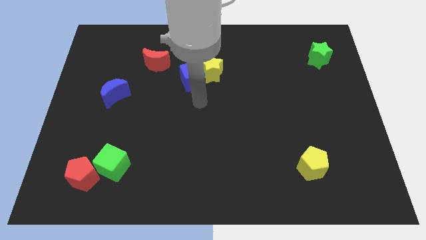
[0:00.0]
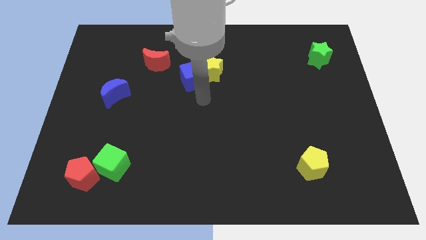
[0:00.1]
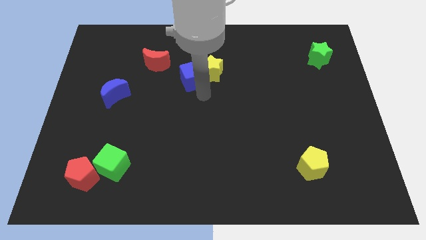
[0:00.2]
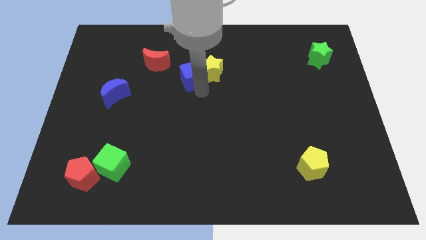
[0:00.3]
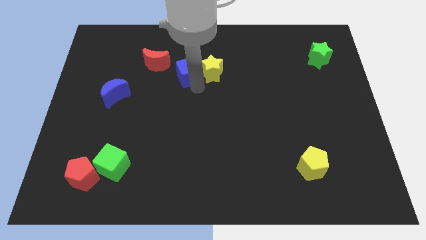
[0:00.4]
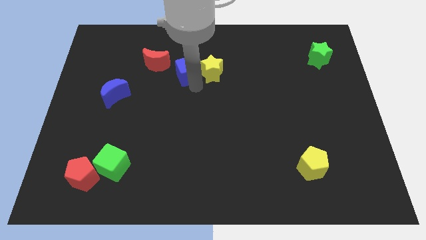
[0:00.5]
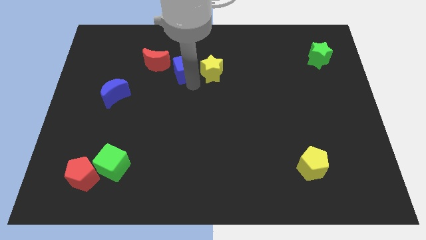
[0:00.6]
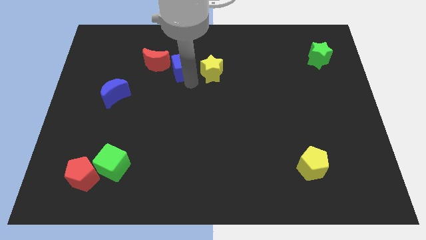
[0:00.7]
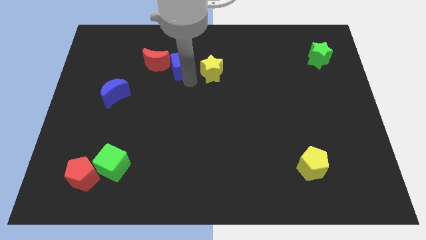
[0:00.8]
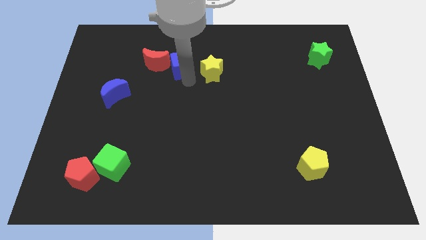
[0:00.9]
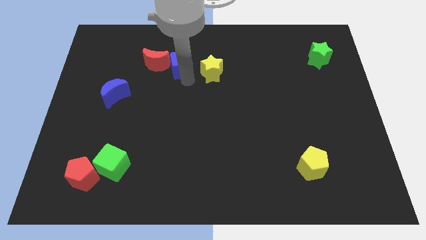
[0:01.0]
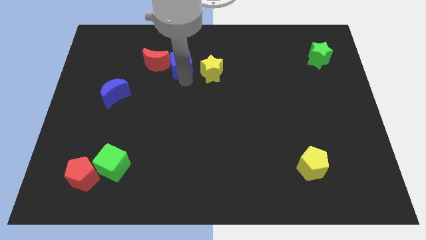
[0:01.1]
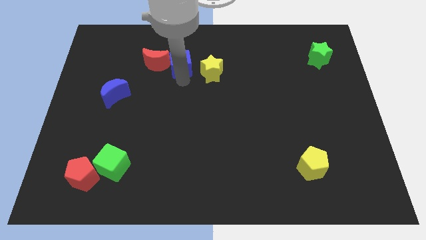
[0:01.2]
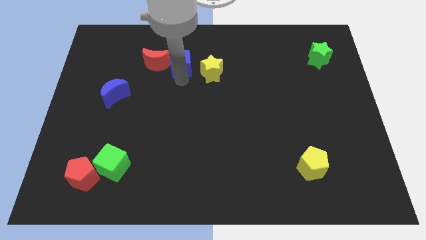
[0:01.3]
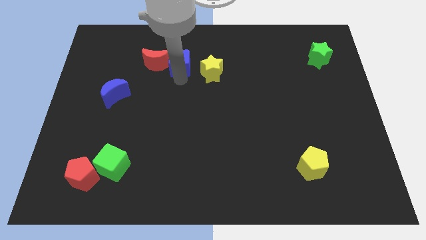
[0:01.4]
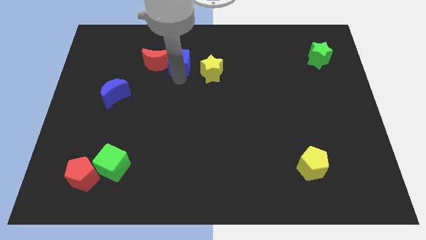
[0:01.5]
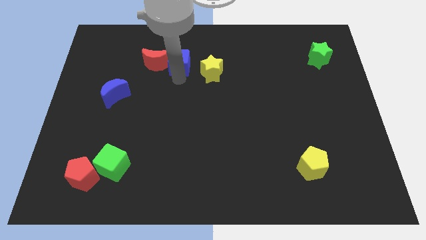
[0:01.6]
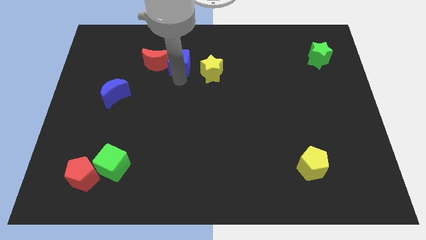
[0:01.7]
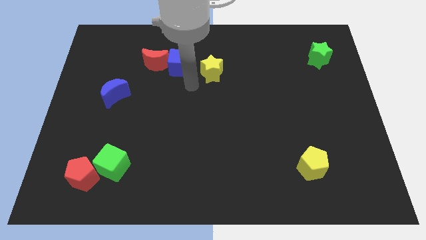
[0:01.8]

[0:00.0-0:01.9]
move the blue cube towards right to the red crescent

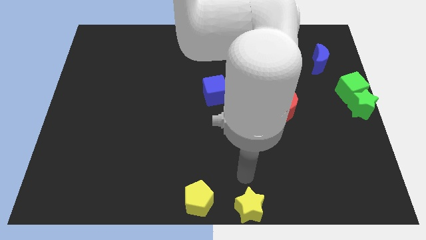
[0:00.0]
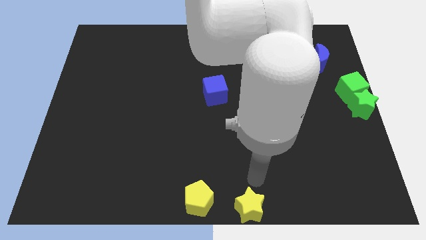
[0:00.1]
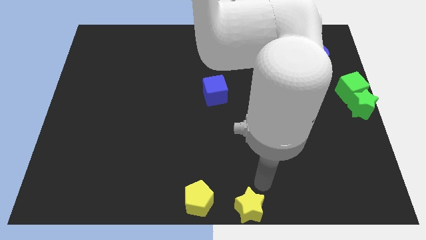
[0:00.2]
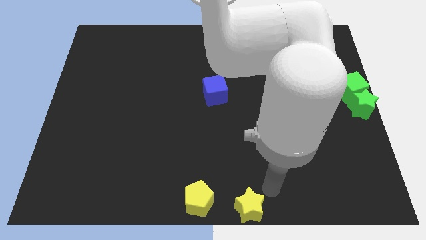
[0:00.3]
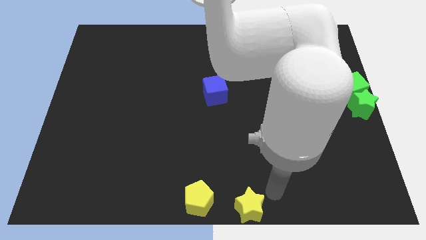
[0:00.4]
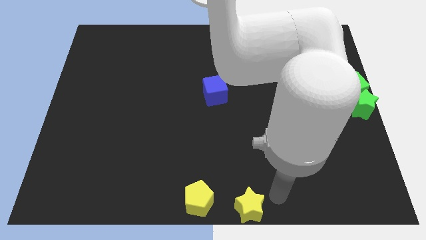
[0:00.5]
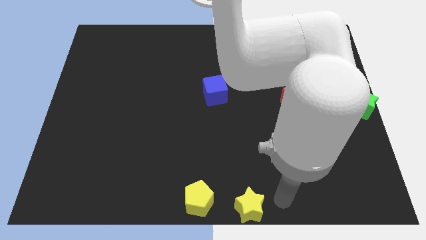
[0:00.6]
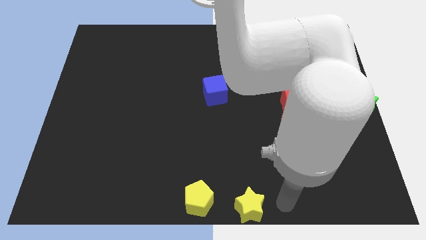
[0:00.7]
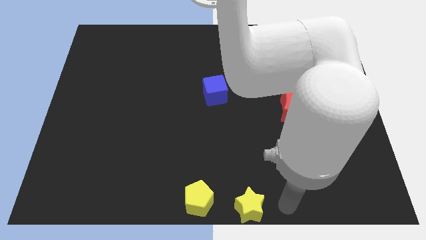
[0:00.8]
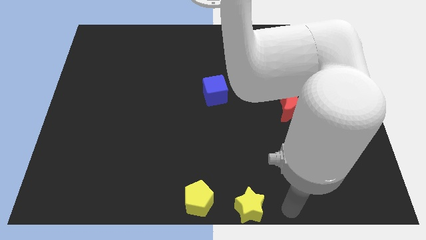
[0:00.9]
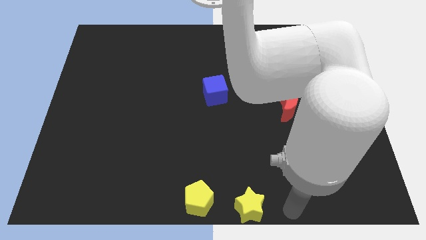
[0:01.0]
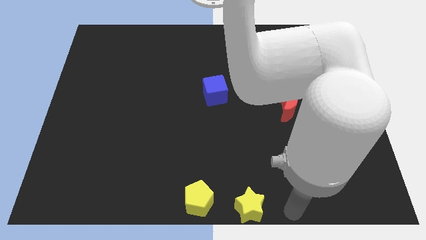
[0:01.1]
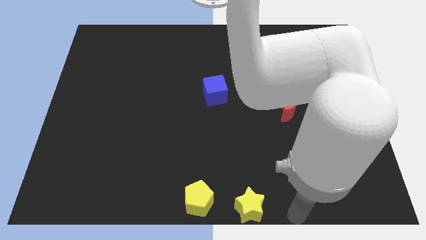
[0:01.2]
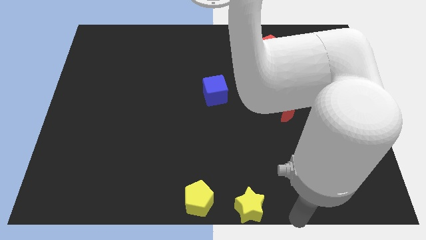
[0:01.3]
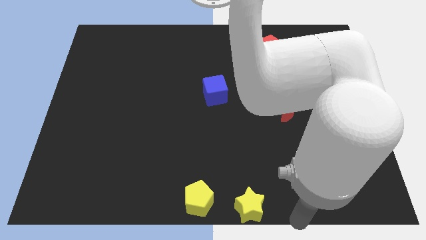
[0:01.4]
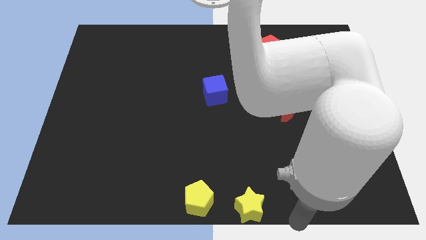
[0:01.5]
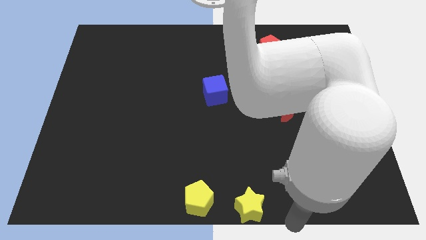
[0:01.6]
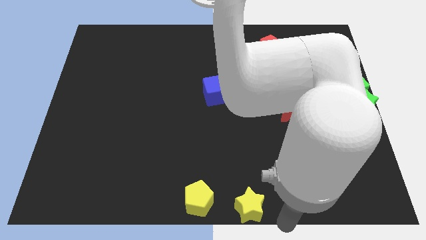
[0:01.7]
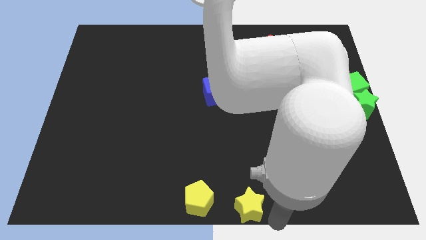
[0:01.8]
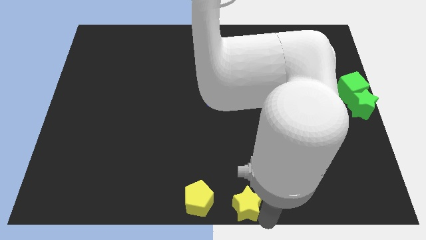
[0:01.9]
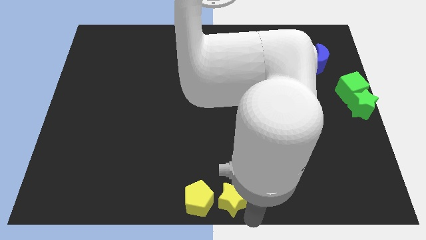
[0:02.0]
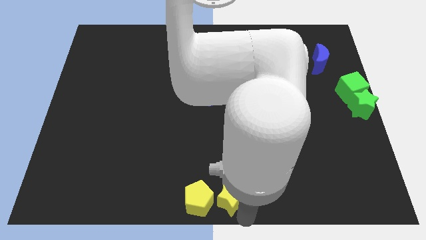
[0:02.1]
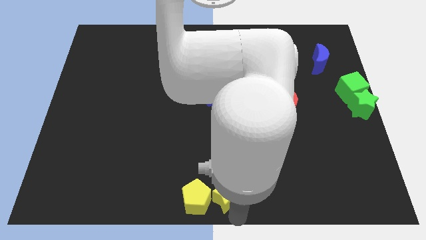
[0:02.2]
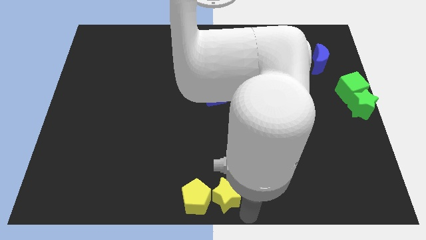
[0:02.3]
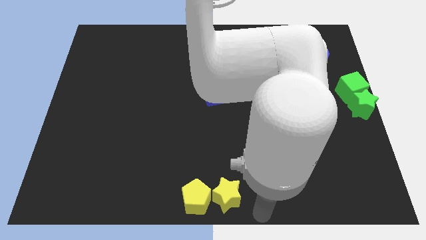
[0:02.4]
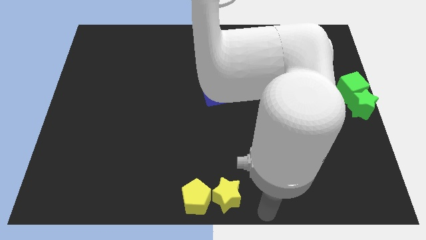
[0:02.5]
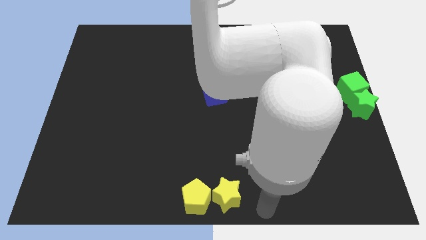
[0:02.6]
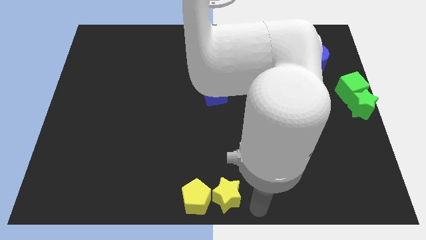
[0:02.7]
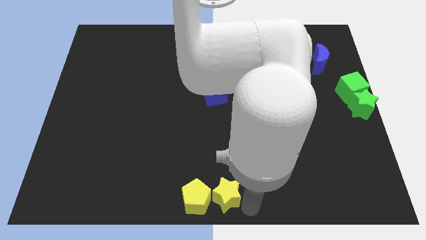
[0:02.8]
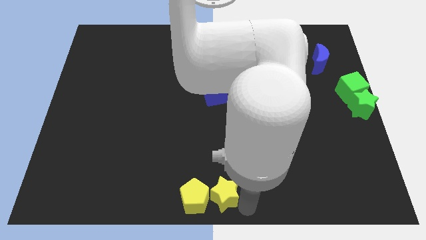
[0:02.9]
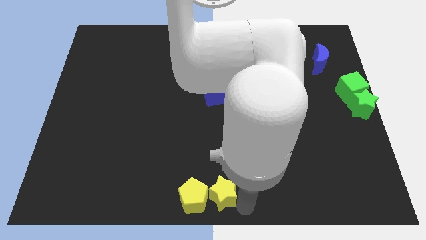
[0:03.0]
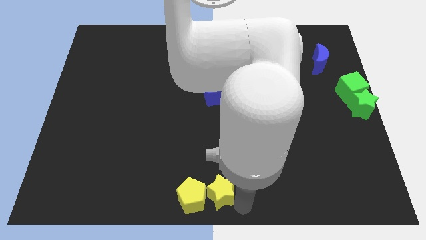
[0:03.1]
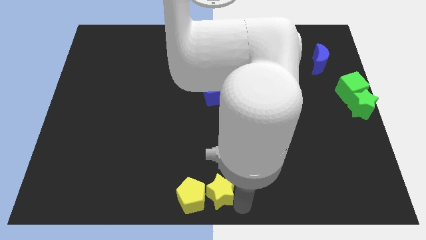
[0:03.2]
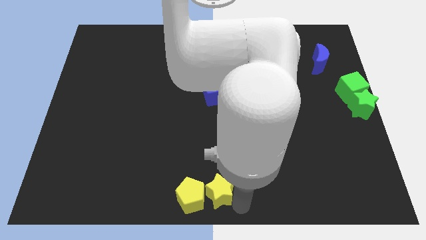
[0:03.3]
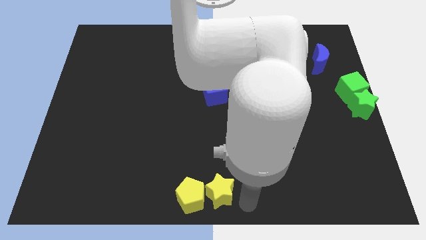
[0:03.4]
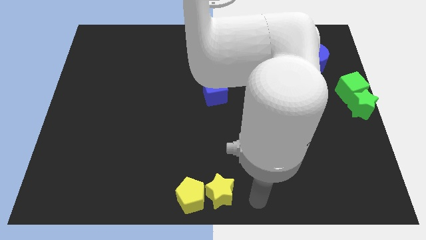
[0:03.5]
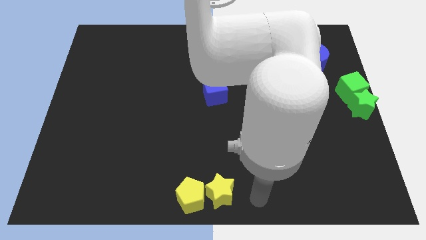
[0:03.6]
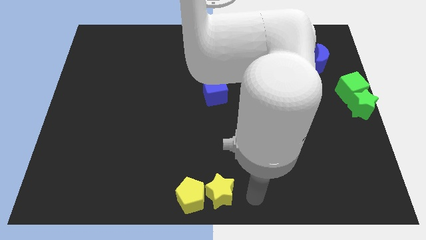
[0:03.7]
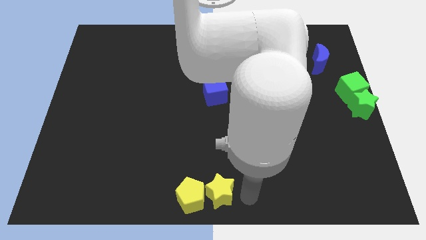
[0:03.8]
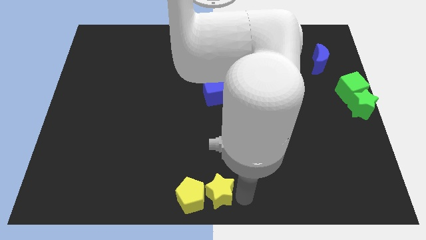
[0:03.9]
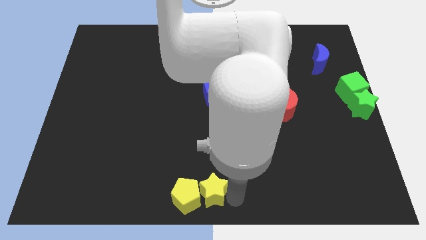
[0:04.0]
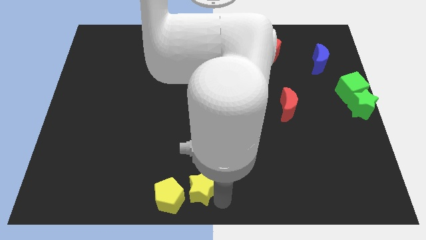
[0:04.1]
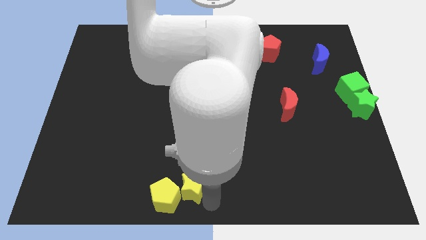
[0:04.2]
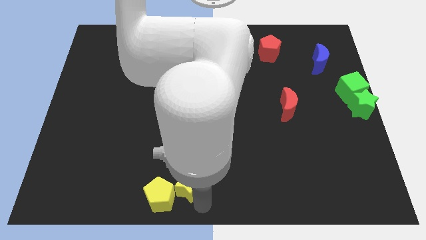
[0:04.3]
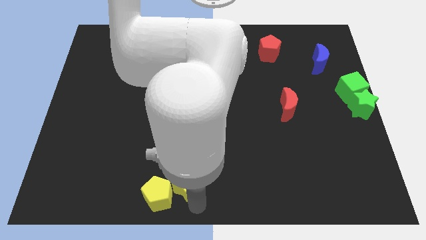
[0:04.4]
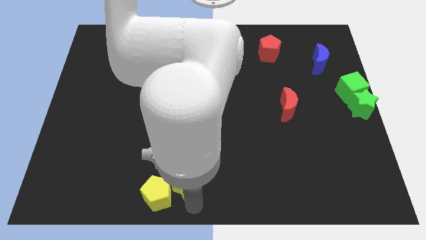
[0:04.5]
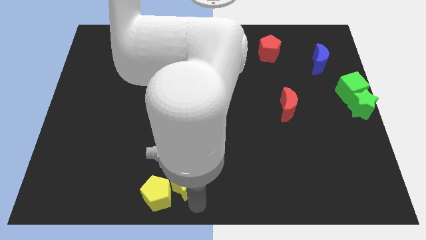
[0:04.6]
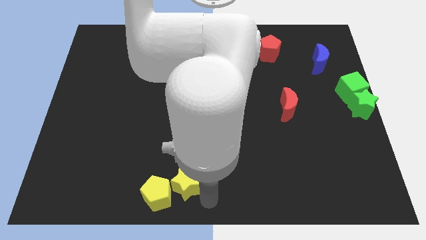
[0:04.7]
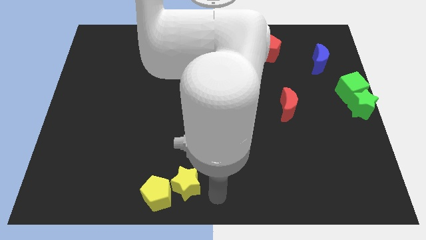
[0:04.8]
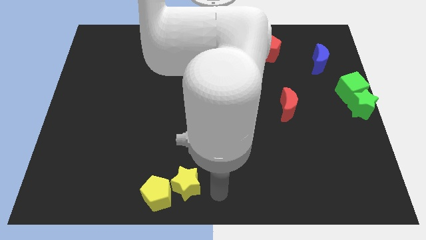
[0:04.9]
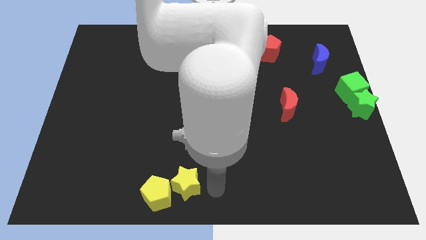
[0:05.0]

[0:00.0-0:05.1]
push the yellow star into the yellow pentagon

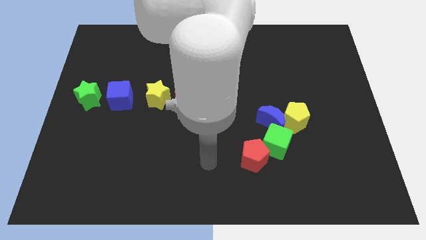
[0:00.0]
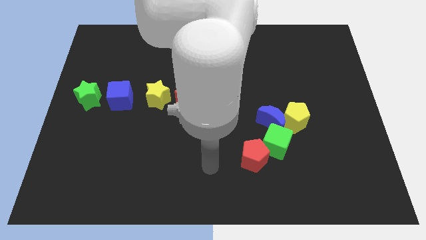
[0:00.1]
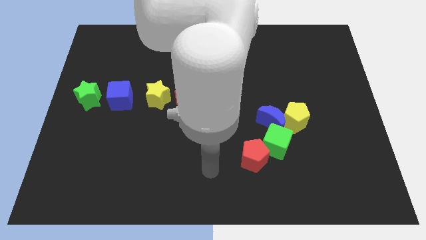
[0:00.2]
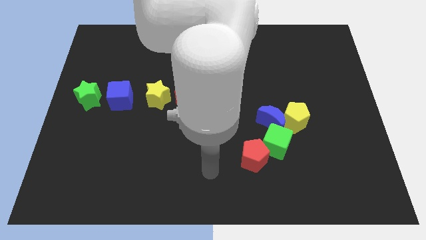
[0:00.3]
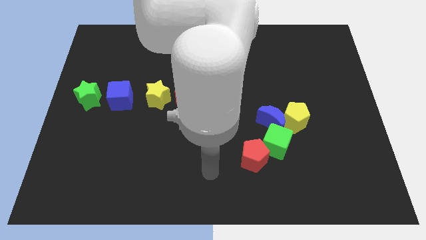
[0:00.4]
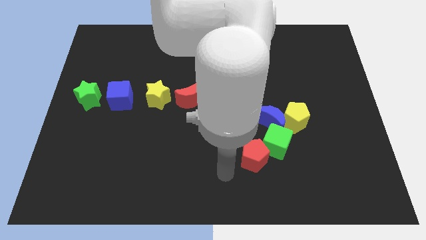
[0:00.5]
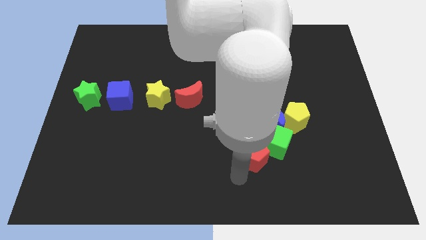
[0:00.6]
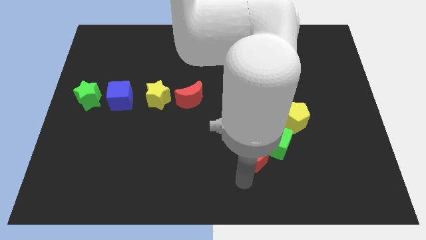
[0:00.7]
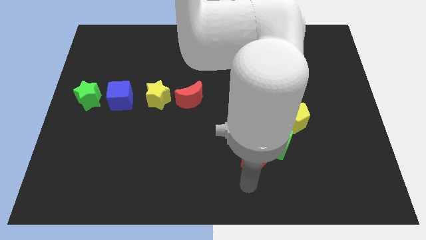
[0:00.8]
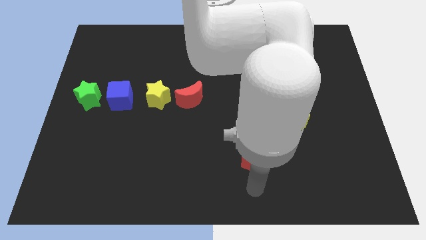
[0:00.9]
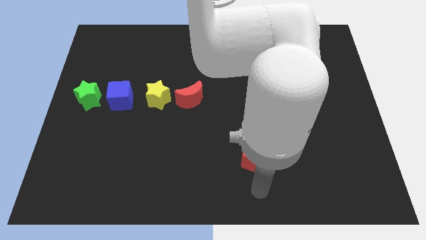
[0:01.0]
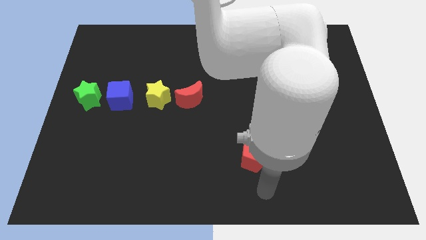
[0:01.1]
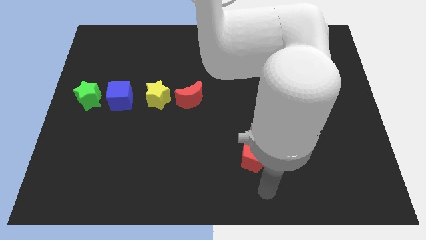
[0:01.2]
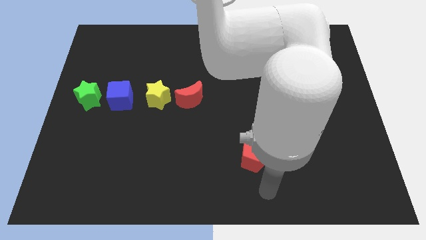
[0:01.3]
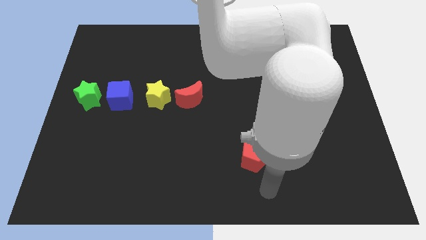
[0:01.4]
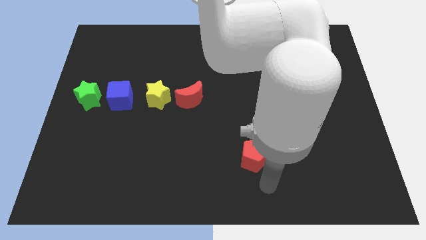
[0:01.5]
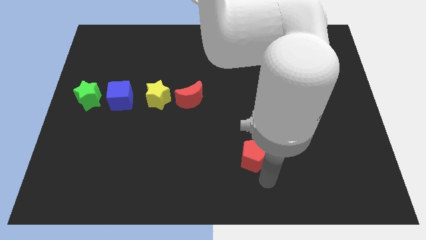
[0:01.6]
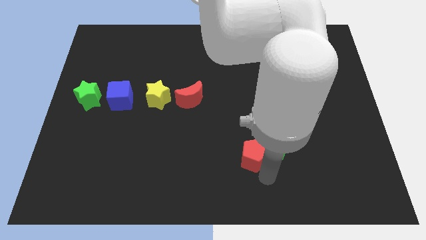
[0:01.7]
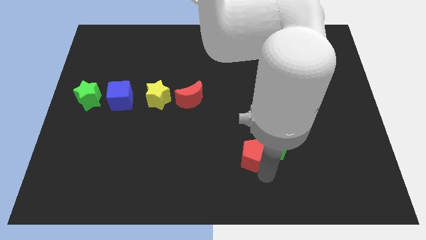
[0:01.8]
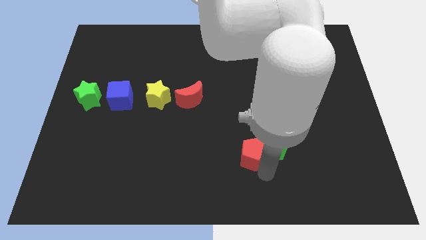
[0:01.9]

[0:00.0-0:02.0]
move the arm to the bottom of the red pentagon

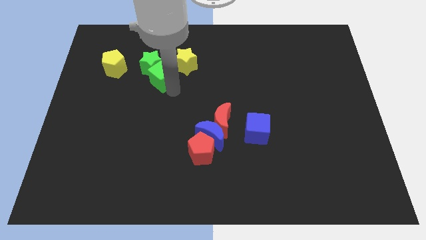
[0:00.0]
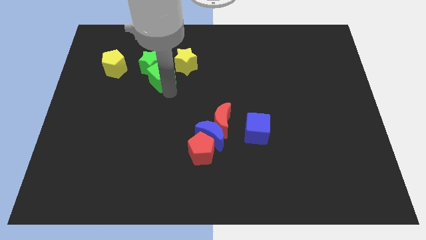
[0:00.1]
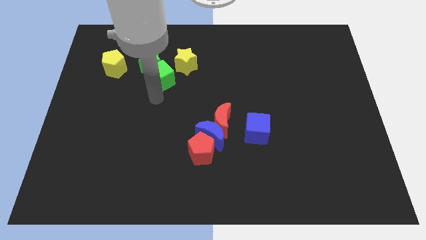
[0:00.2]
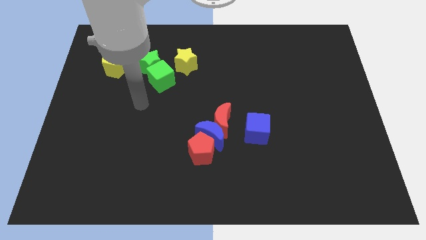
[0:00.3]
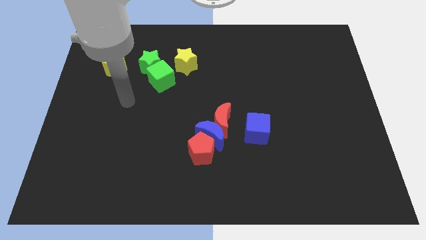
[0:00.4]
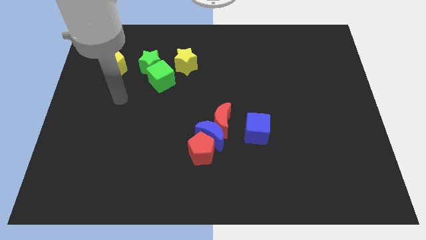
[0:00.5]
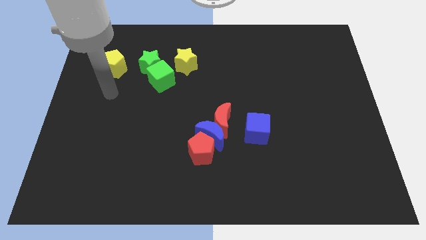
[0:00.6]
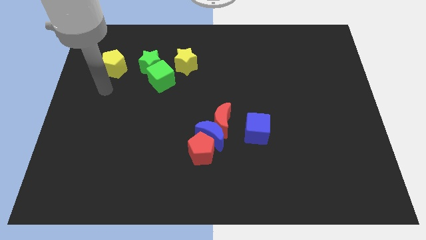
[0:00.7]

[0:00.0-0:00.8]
go away from the green cube
